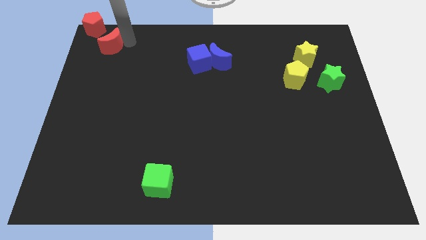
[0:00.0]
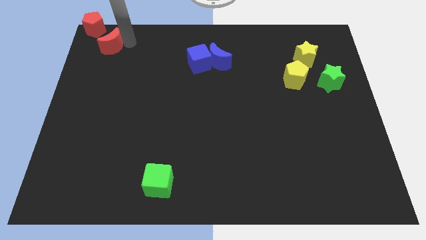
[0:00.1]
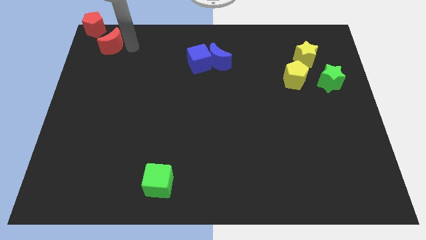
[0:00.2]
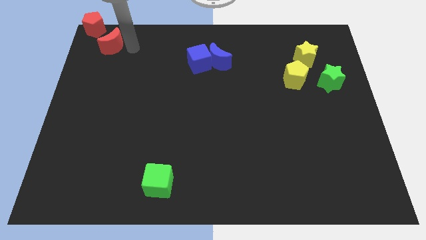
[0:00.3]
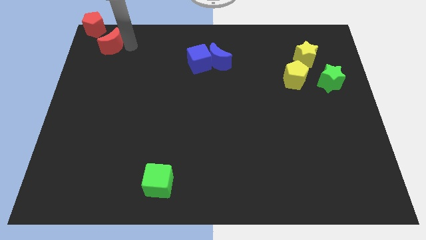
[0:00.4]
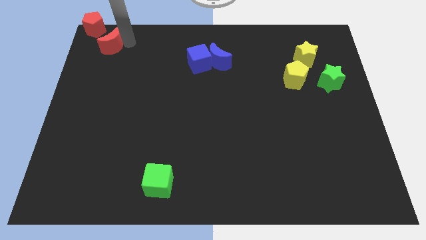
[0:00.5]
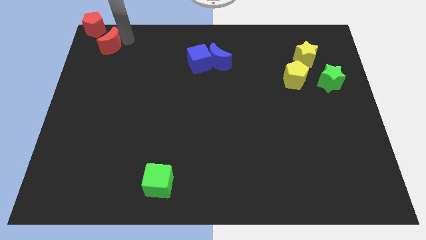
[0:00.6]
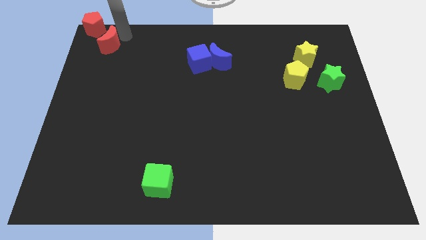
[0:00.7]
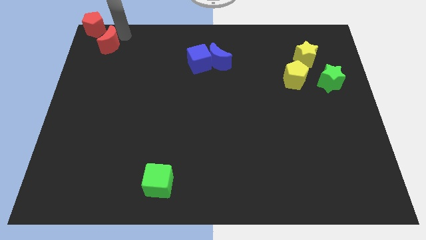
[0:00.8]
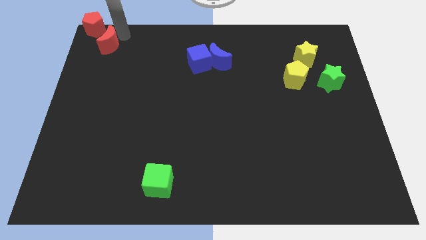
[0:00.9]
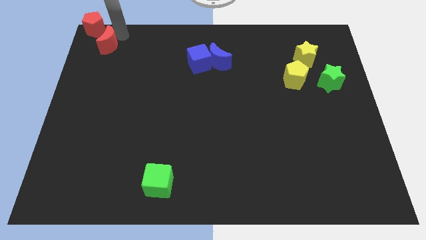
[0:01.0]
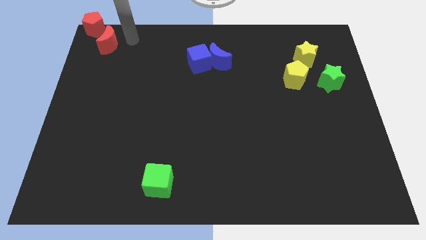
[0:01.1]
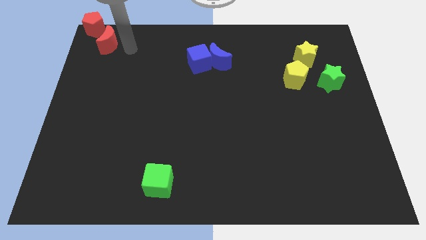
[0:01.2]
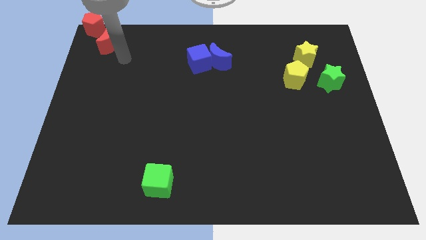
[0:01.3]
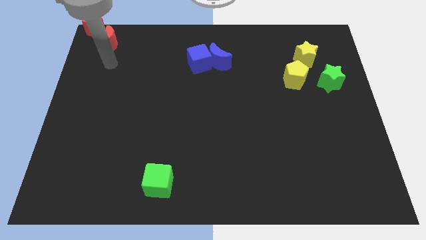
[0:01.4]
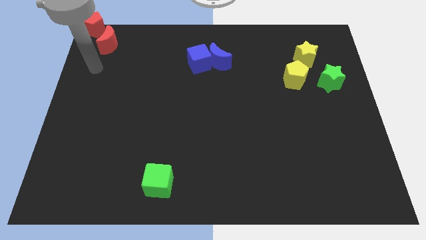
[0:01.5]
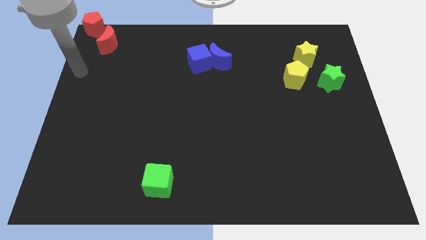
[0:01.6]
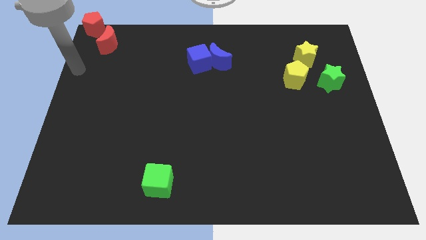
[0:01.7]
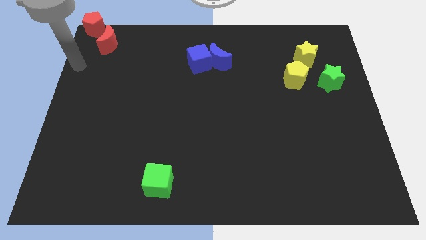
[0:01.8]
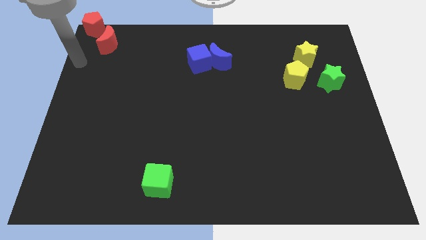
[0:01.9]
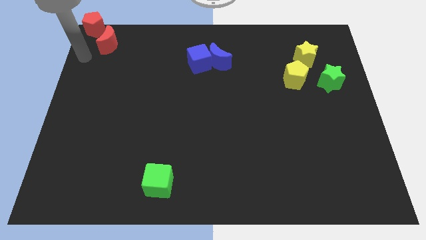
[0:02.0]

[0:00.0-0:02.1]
push the red moon close to the red pentagon

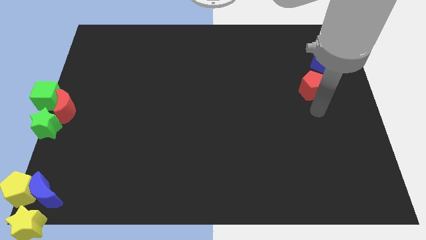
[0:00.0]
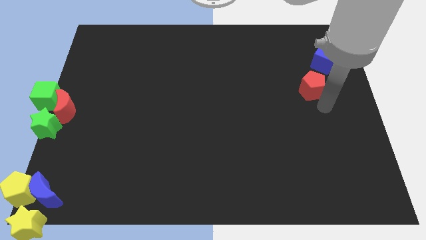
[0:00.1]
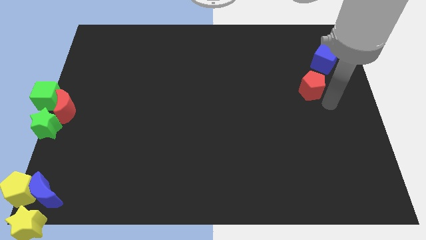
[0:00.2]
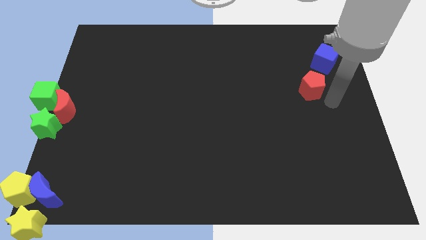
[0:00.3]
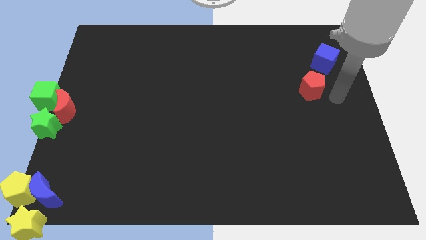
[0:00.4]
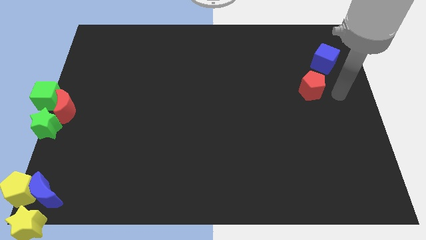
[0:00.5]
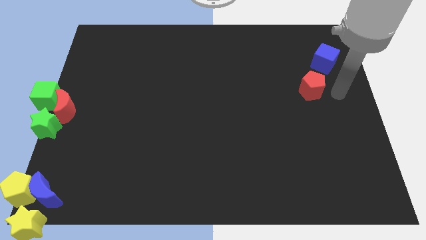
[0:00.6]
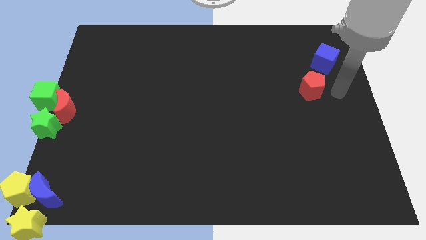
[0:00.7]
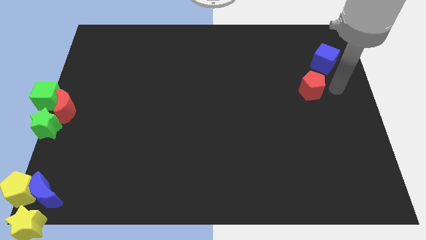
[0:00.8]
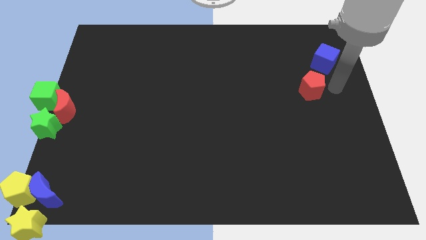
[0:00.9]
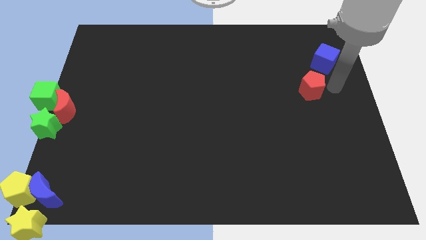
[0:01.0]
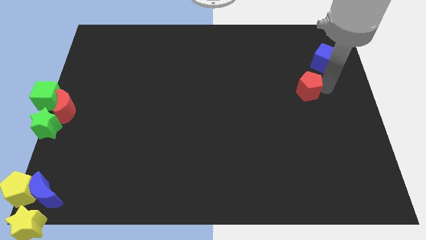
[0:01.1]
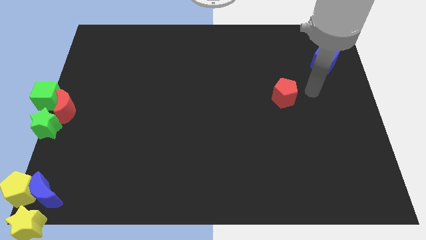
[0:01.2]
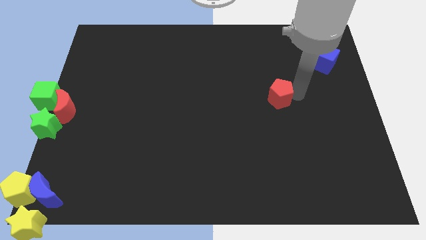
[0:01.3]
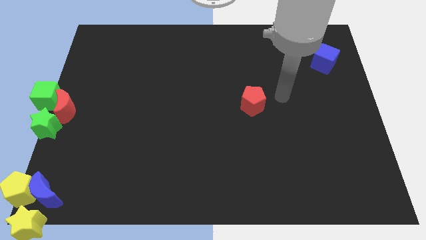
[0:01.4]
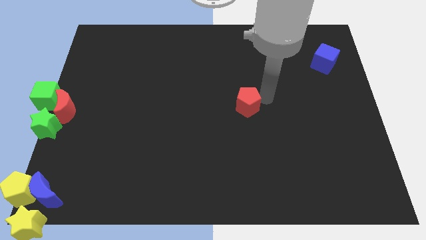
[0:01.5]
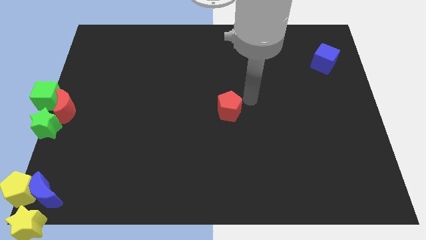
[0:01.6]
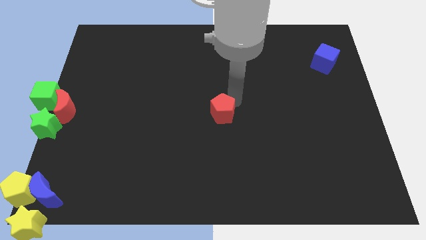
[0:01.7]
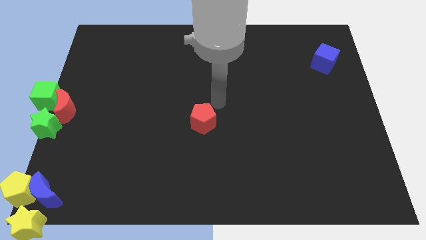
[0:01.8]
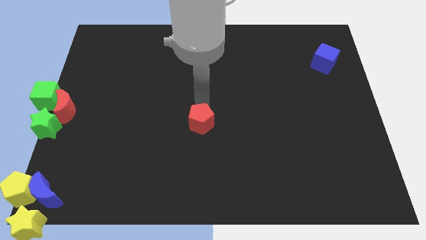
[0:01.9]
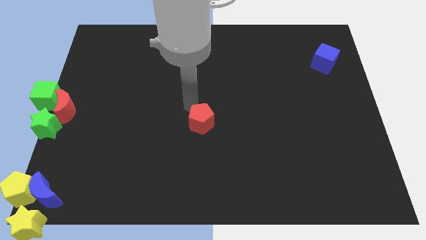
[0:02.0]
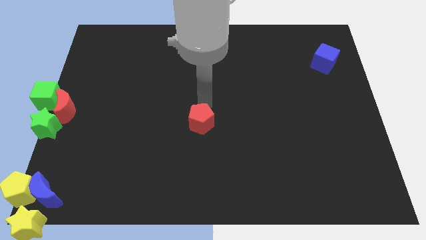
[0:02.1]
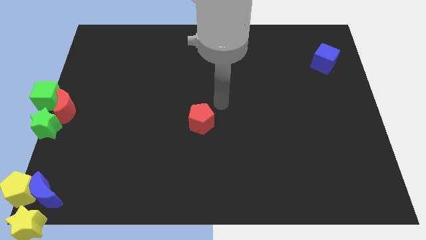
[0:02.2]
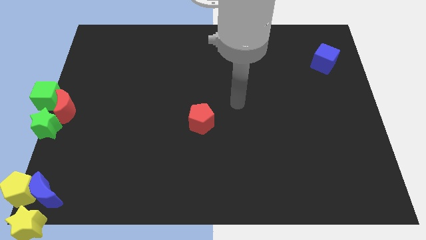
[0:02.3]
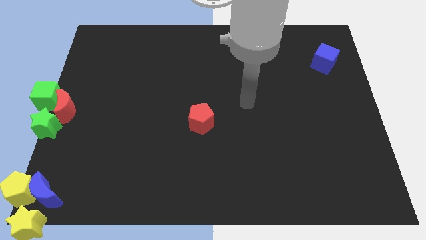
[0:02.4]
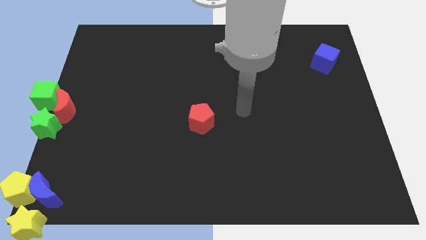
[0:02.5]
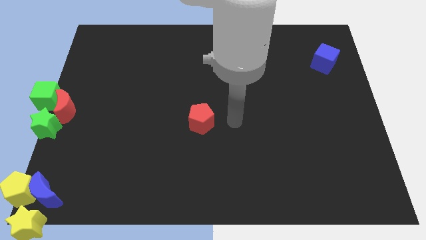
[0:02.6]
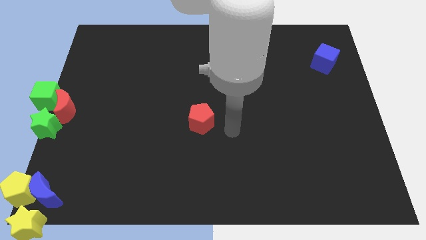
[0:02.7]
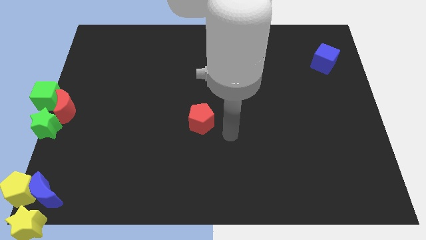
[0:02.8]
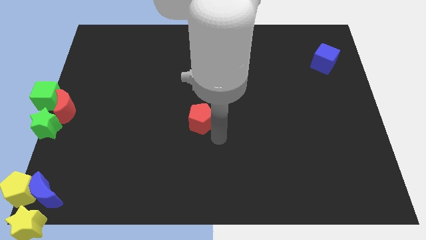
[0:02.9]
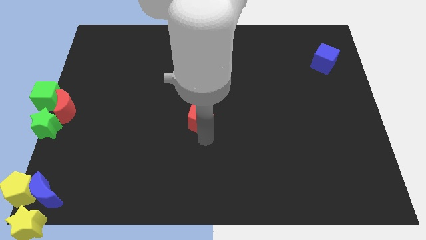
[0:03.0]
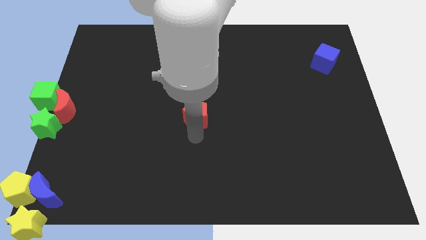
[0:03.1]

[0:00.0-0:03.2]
drag red pentagon towards the center of the board

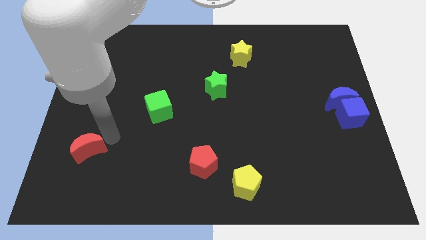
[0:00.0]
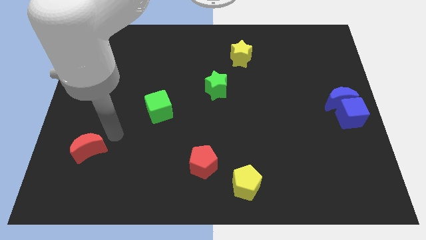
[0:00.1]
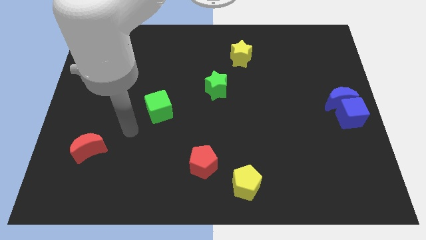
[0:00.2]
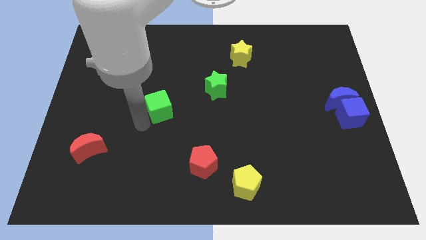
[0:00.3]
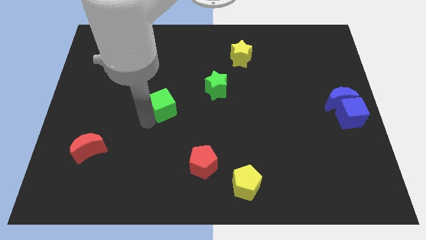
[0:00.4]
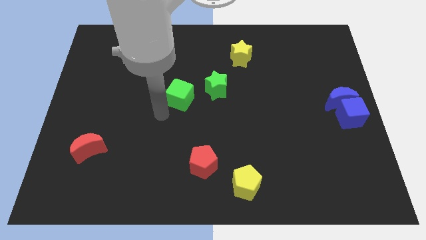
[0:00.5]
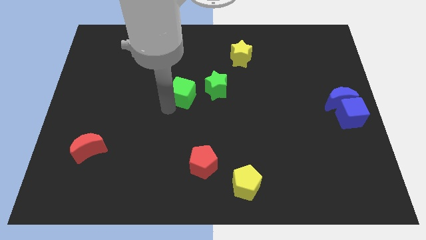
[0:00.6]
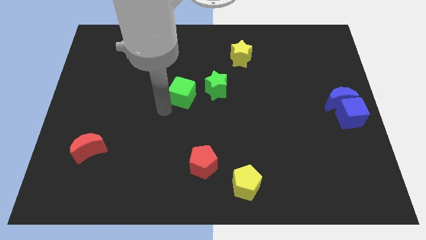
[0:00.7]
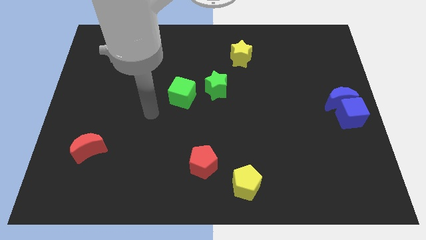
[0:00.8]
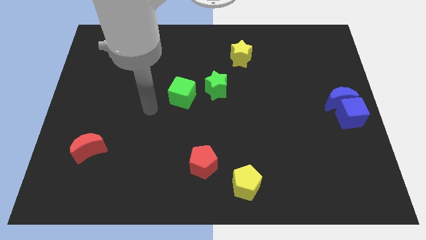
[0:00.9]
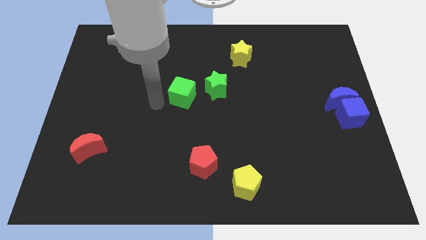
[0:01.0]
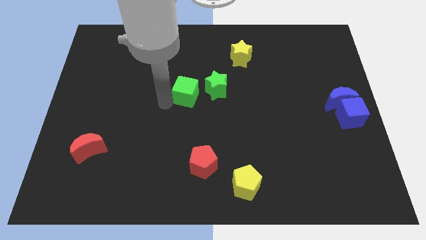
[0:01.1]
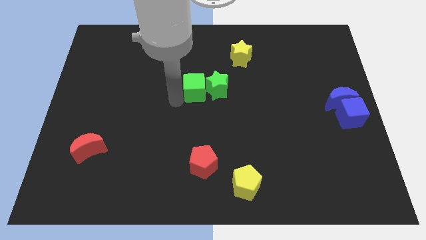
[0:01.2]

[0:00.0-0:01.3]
put the green cube at the center of the board

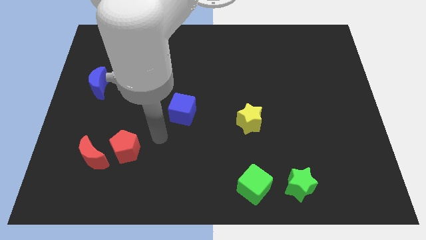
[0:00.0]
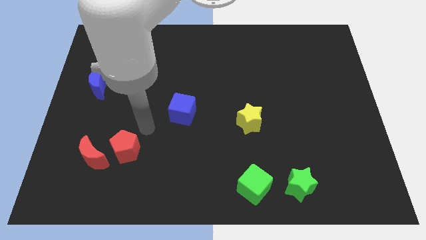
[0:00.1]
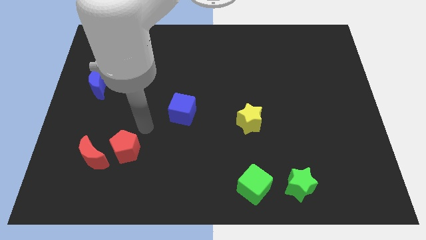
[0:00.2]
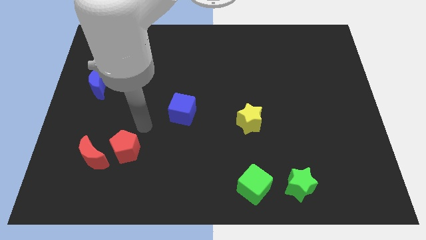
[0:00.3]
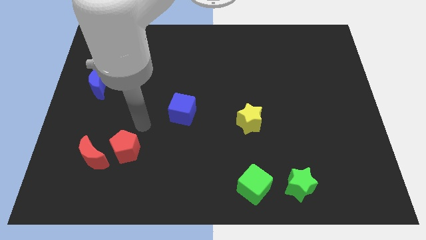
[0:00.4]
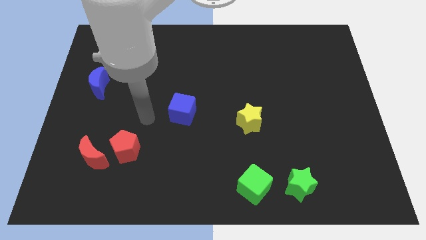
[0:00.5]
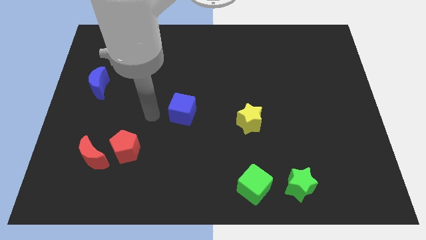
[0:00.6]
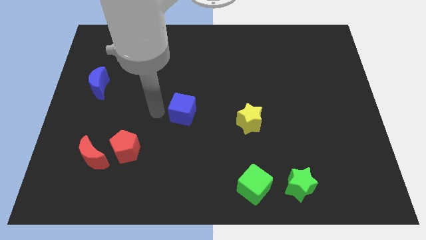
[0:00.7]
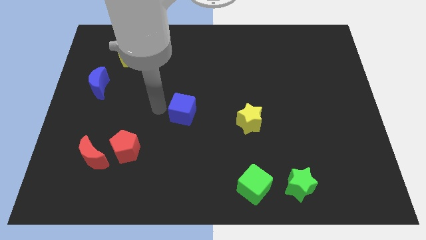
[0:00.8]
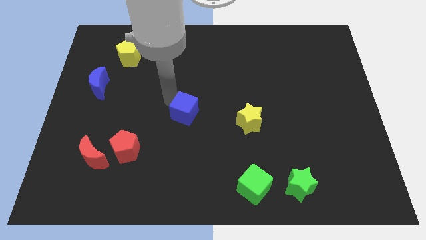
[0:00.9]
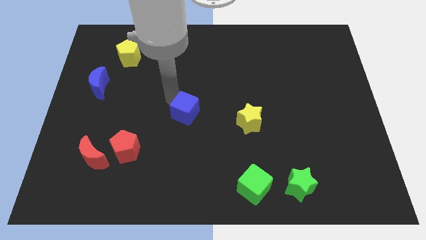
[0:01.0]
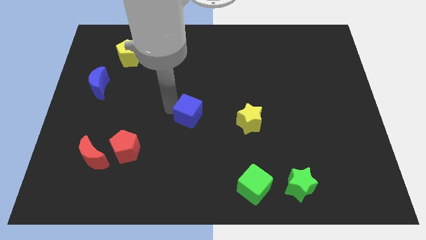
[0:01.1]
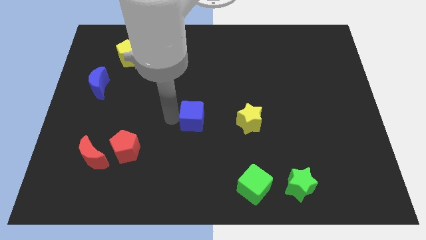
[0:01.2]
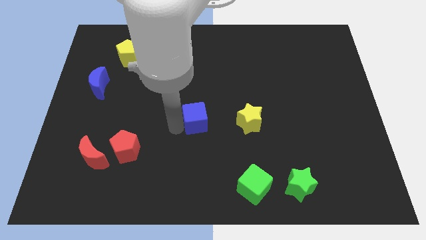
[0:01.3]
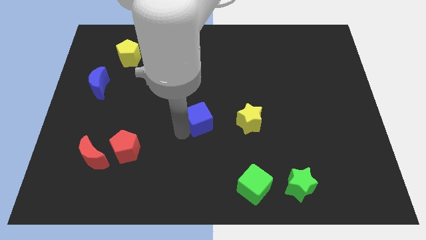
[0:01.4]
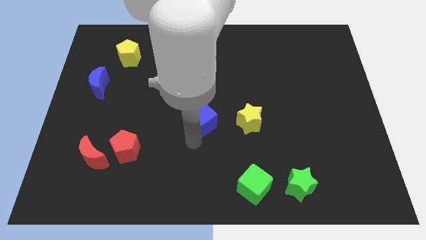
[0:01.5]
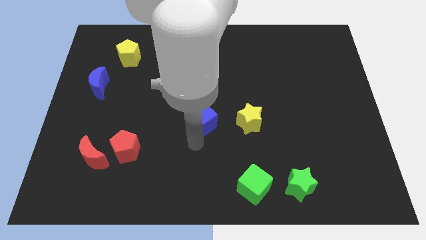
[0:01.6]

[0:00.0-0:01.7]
place the blue cube at the left side of the yellow star

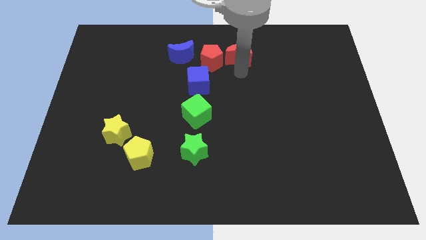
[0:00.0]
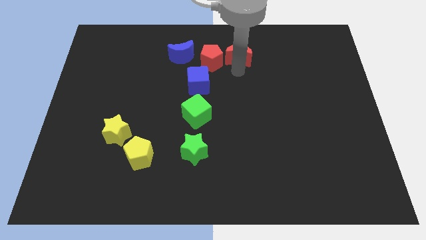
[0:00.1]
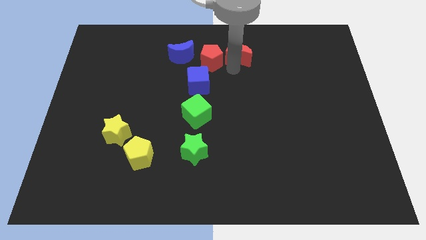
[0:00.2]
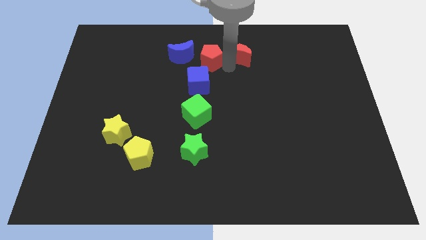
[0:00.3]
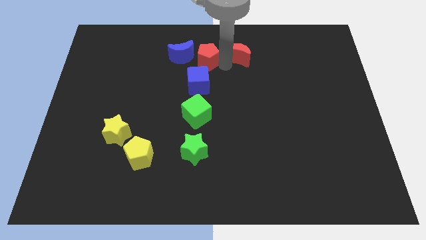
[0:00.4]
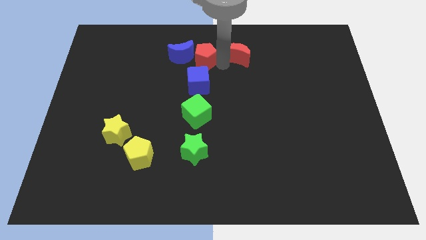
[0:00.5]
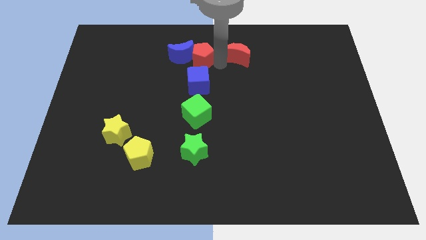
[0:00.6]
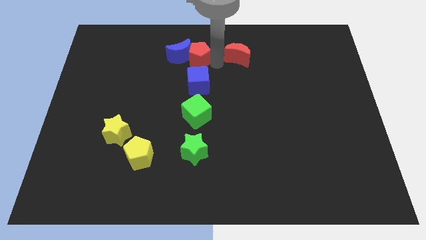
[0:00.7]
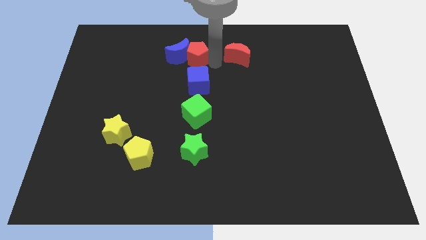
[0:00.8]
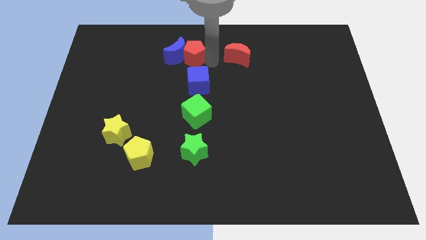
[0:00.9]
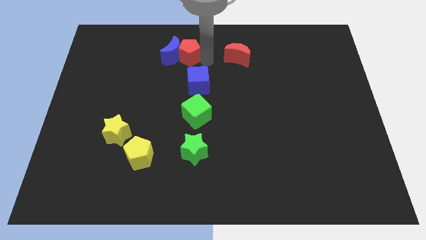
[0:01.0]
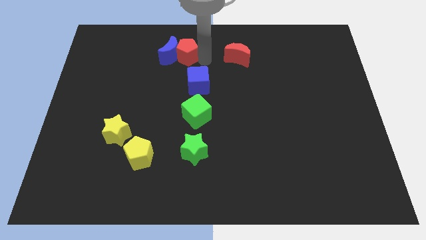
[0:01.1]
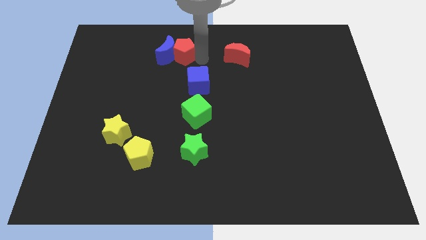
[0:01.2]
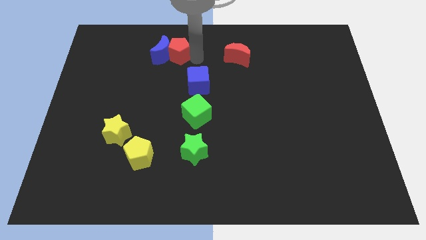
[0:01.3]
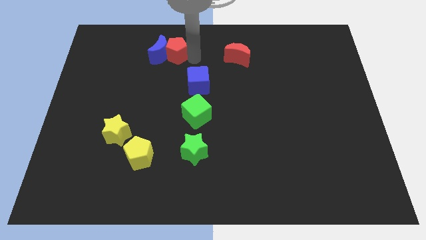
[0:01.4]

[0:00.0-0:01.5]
push the blue moon slightly to the left side with the red pentagon
